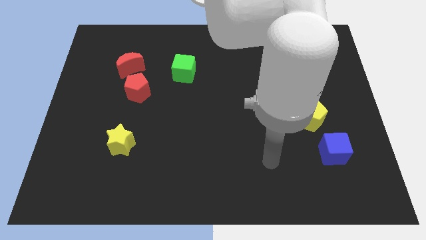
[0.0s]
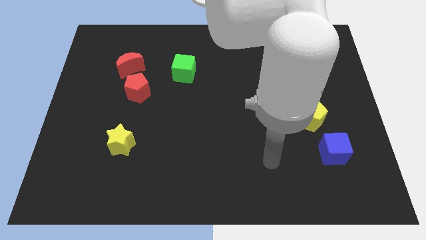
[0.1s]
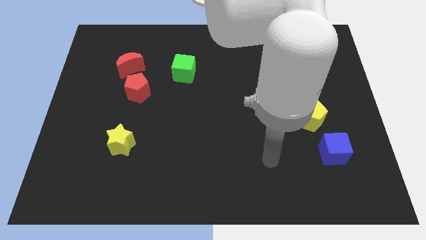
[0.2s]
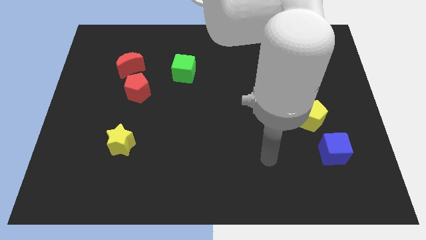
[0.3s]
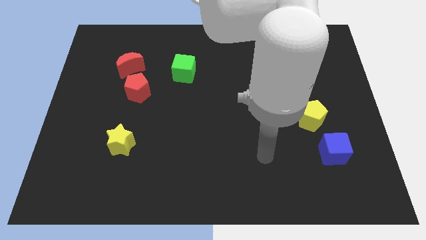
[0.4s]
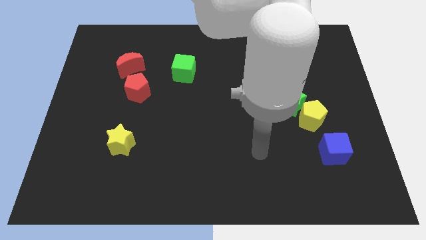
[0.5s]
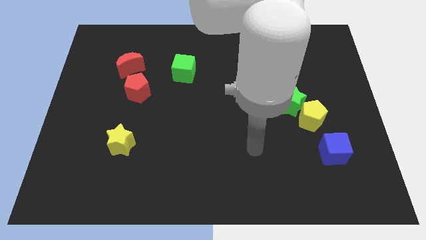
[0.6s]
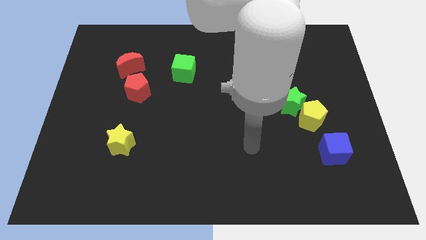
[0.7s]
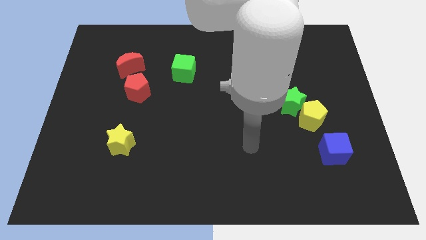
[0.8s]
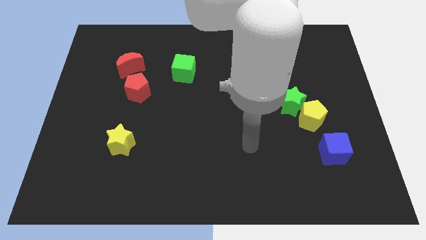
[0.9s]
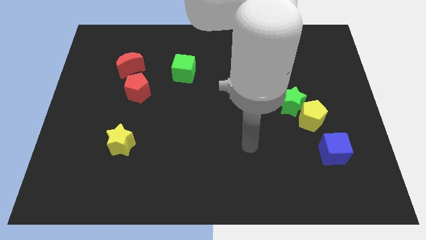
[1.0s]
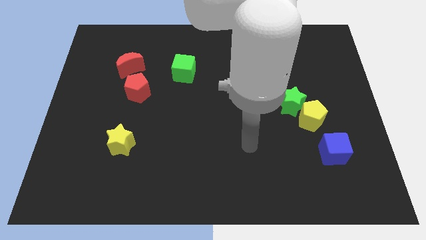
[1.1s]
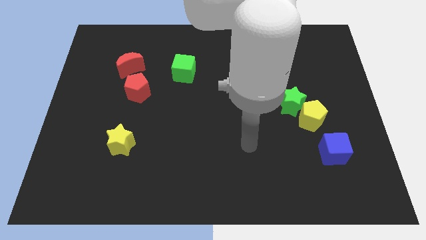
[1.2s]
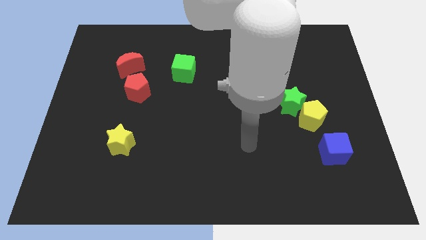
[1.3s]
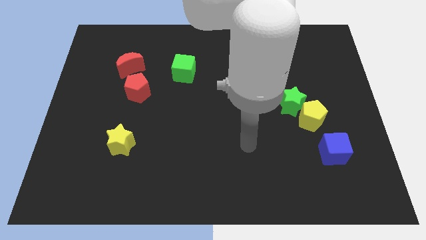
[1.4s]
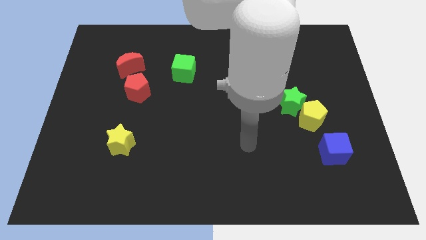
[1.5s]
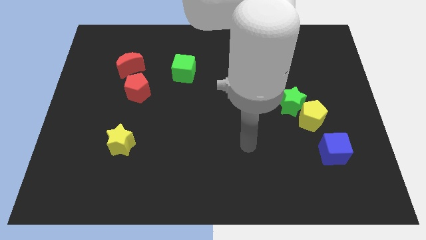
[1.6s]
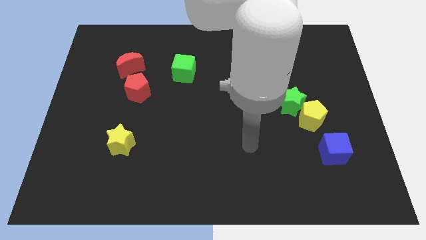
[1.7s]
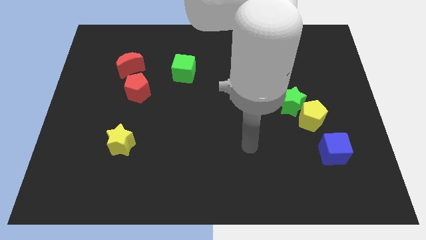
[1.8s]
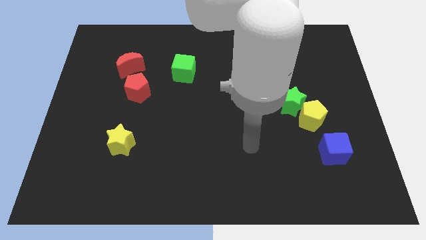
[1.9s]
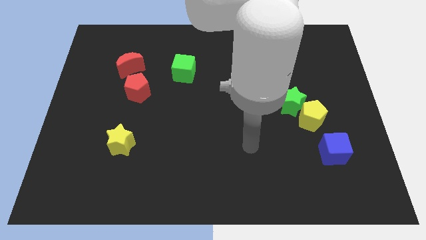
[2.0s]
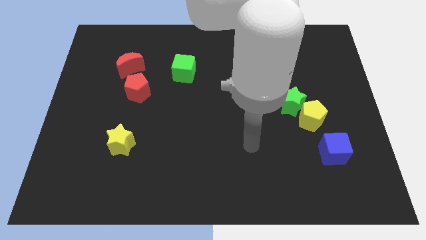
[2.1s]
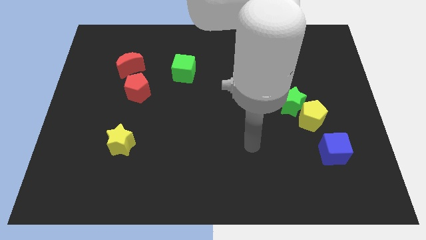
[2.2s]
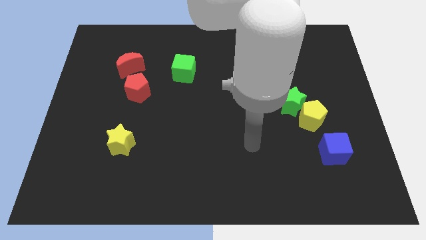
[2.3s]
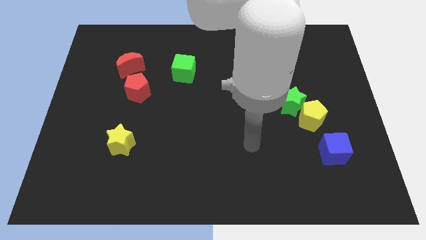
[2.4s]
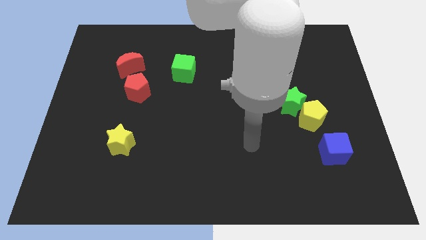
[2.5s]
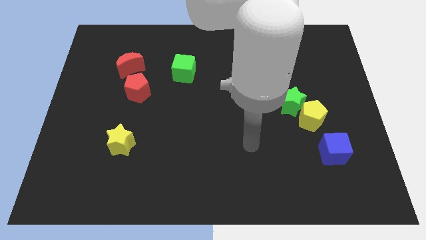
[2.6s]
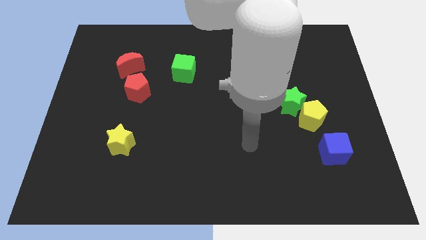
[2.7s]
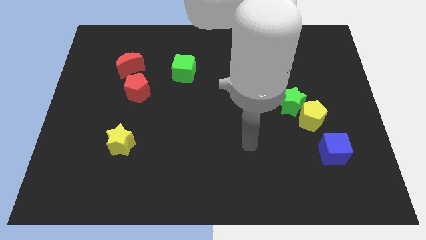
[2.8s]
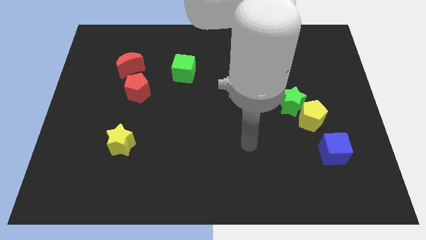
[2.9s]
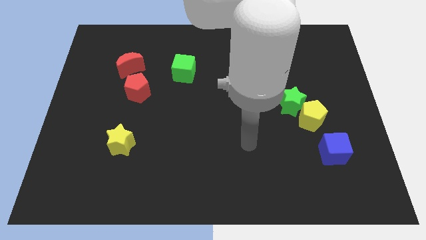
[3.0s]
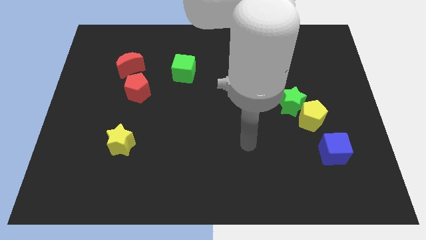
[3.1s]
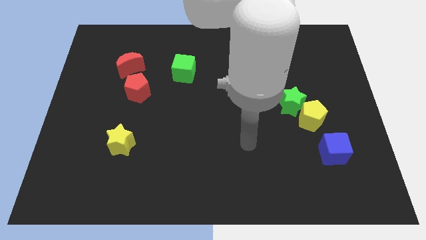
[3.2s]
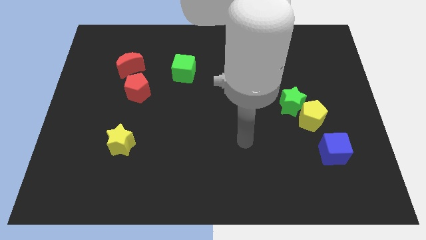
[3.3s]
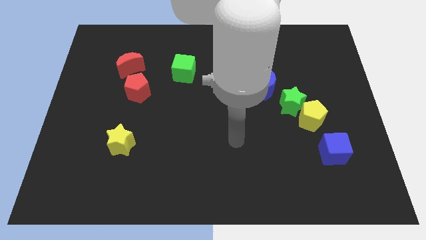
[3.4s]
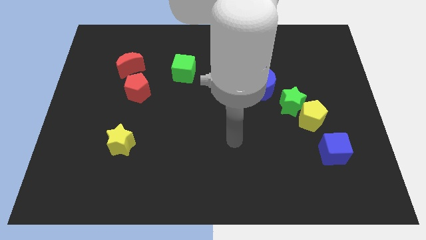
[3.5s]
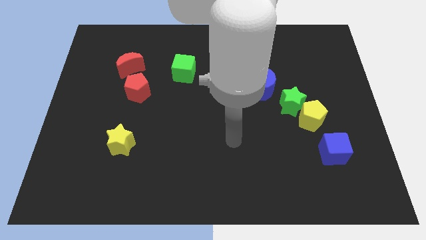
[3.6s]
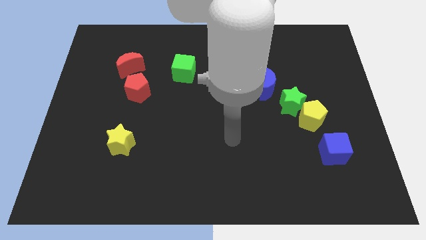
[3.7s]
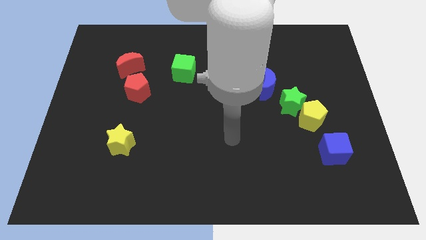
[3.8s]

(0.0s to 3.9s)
push your hand in between the blue cube and the yellow star

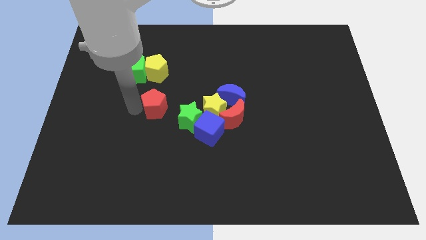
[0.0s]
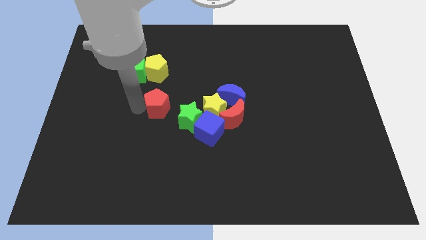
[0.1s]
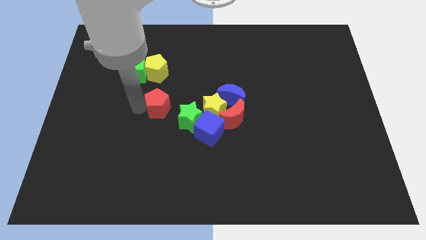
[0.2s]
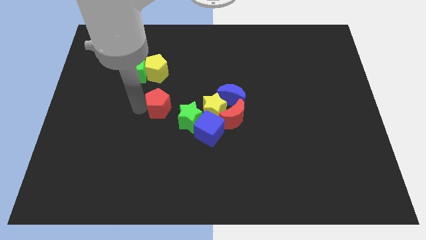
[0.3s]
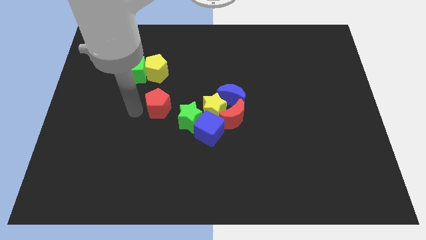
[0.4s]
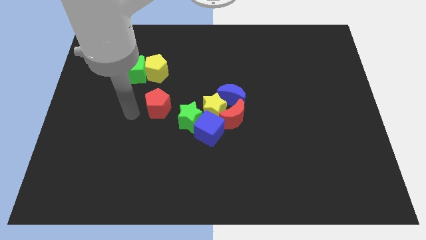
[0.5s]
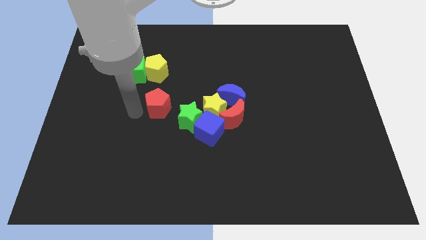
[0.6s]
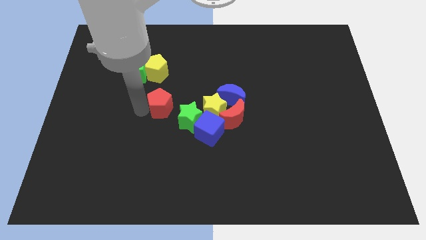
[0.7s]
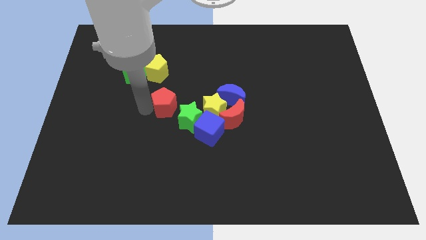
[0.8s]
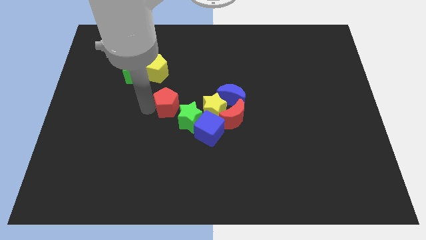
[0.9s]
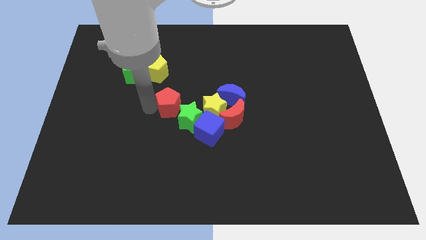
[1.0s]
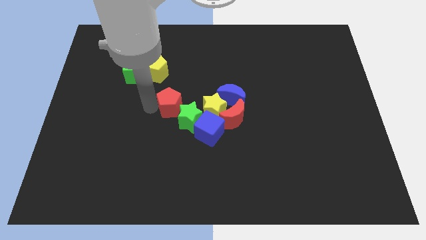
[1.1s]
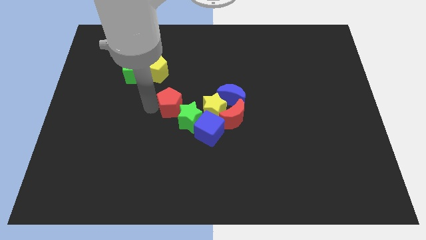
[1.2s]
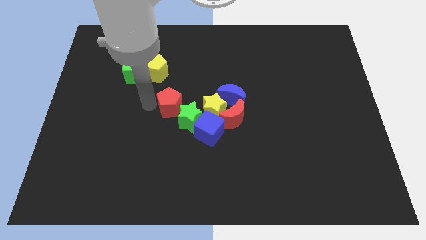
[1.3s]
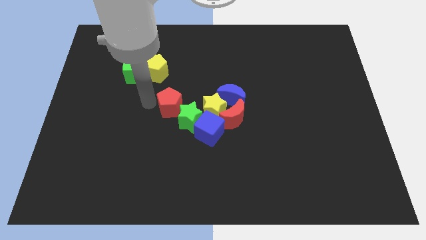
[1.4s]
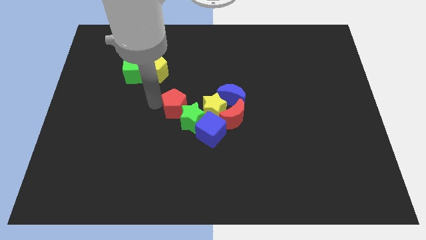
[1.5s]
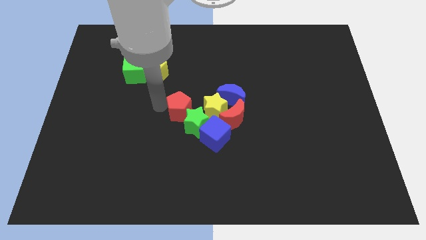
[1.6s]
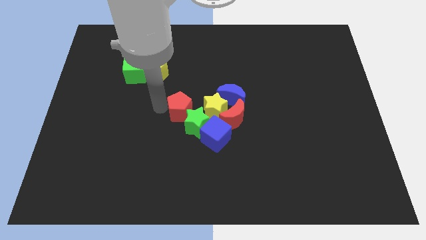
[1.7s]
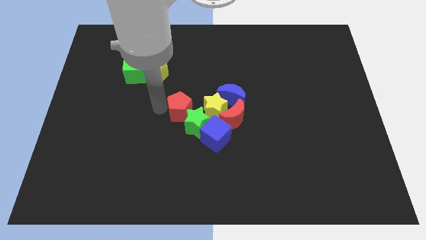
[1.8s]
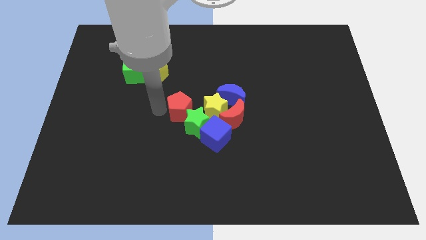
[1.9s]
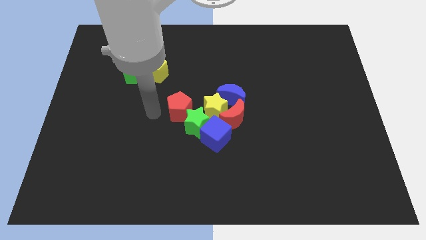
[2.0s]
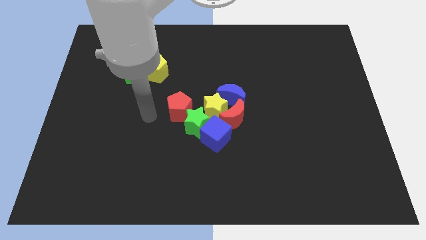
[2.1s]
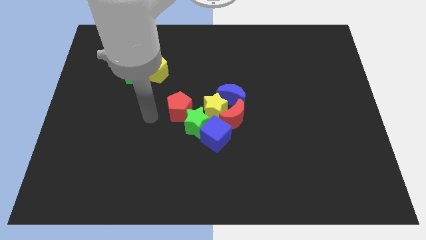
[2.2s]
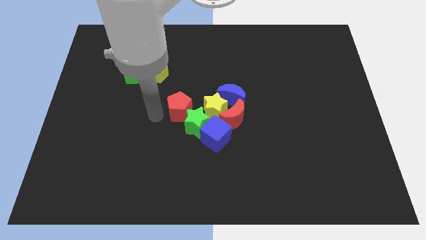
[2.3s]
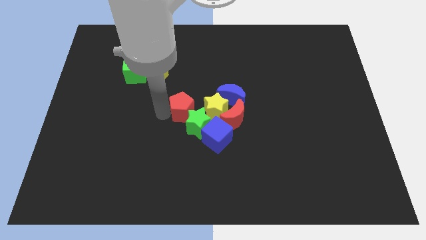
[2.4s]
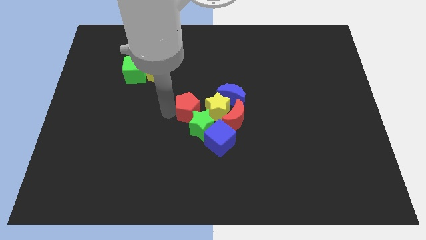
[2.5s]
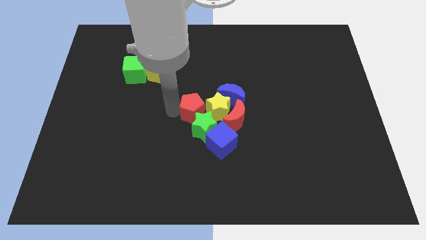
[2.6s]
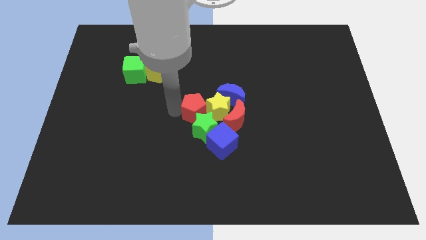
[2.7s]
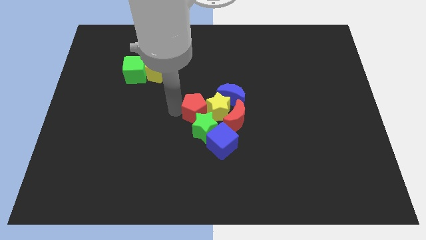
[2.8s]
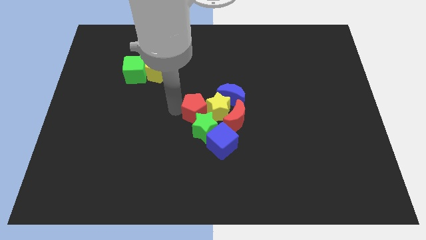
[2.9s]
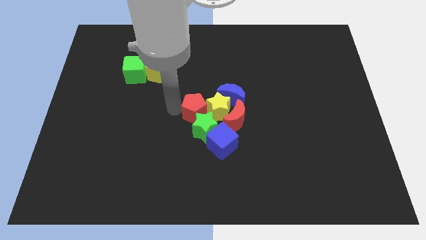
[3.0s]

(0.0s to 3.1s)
push the red pentagon into the group of blocks at center

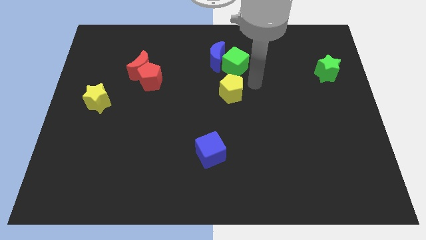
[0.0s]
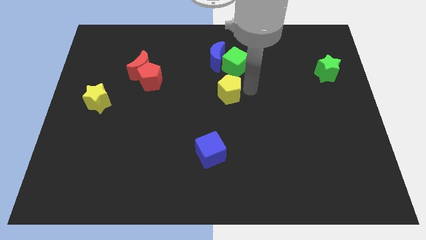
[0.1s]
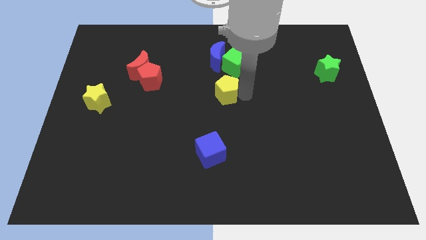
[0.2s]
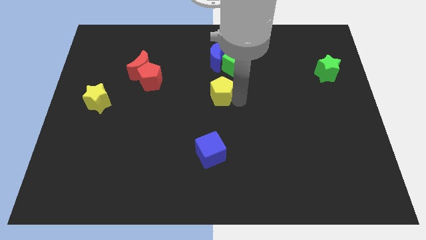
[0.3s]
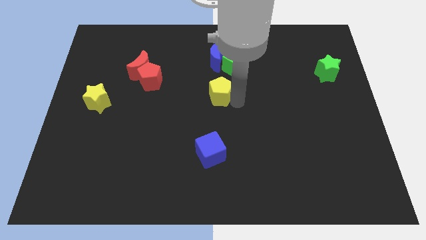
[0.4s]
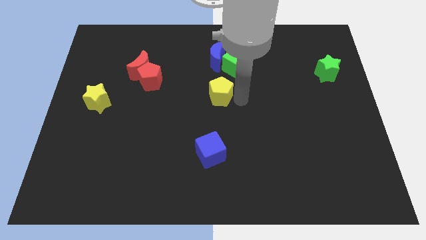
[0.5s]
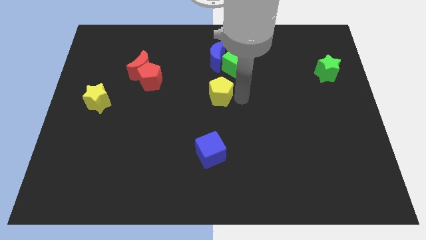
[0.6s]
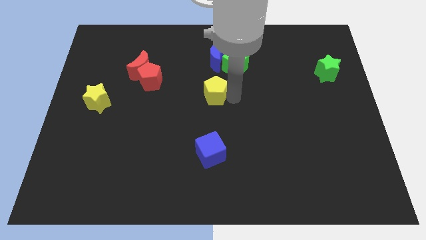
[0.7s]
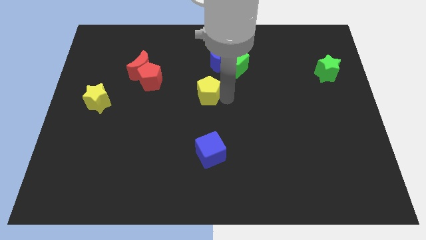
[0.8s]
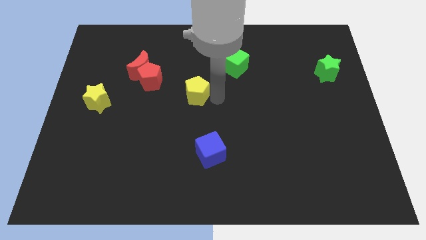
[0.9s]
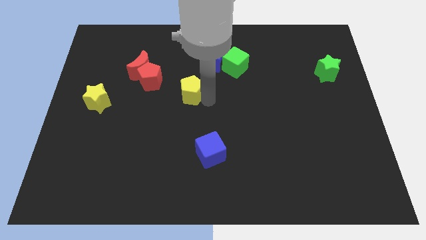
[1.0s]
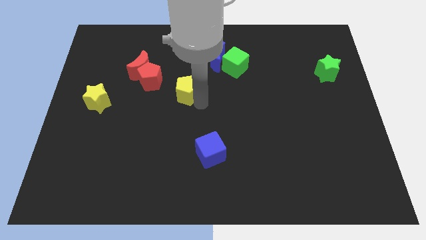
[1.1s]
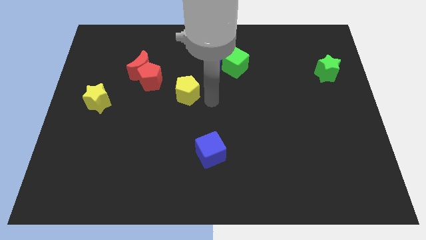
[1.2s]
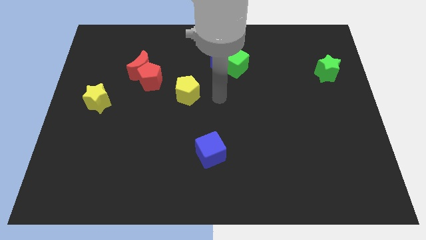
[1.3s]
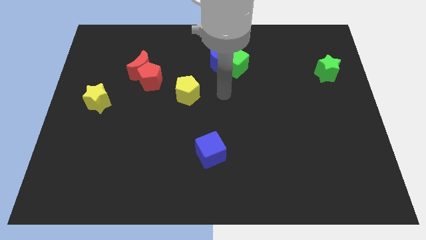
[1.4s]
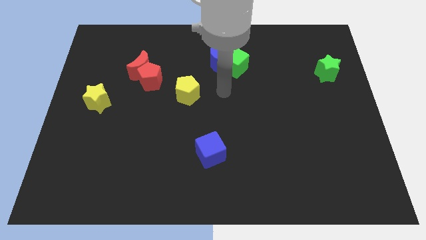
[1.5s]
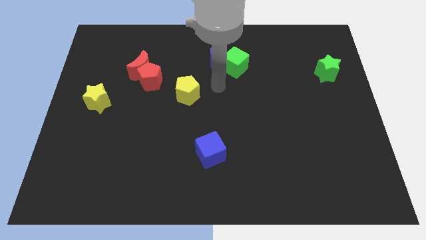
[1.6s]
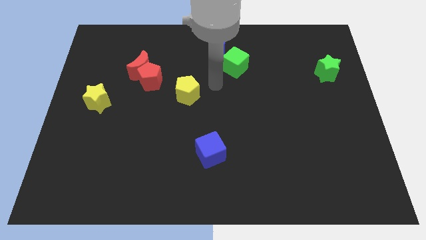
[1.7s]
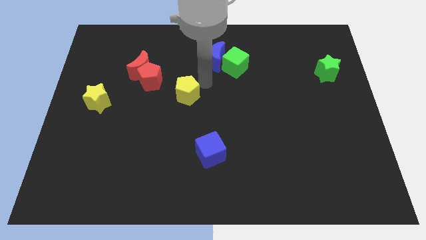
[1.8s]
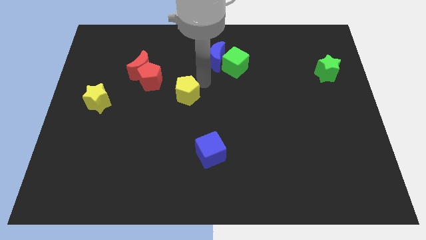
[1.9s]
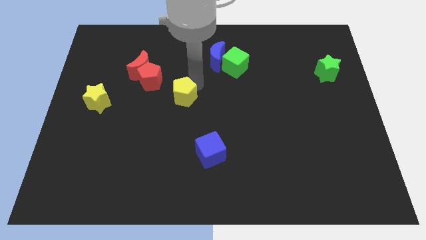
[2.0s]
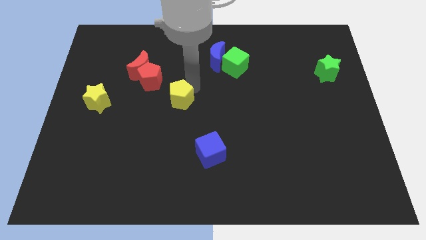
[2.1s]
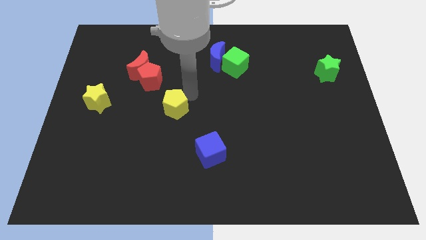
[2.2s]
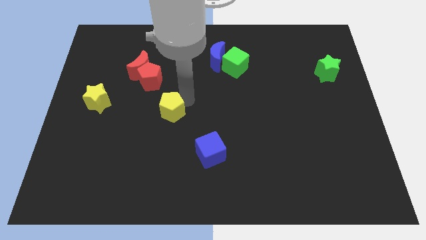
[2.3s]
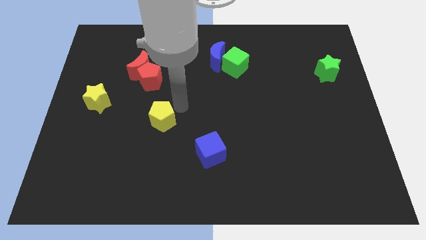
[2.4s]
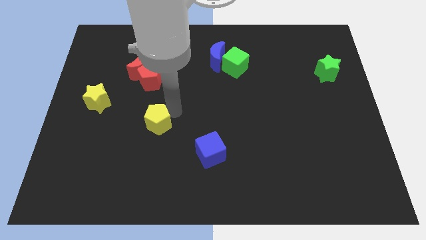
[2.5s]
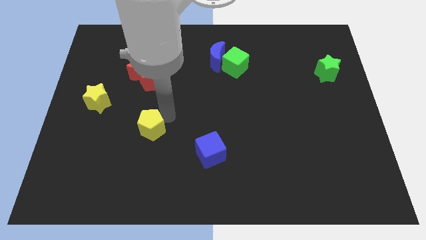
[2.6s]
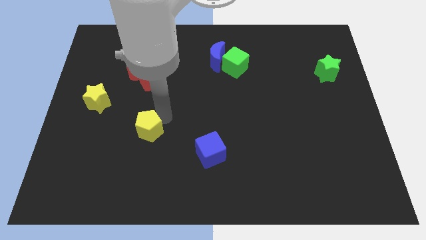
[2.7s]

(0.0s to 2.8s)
push the yellow pentagon in between the yellow star and blue cube
